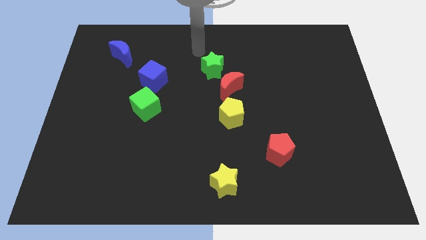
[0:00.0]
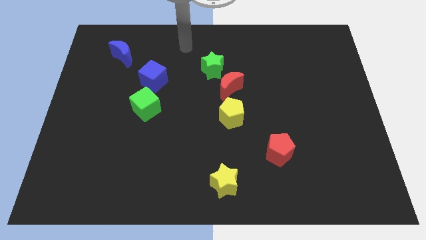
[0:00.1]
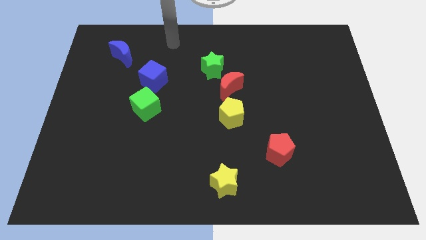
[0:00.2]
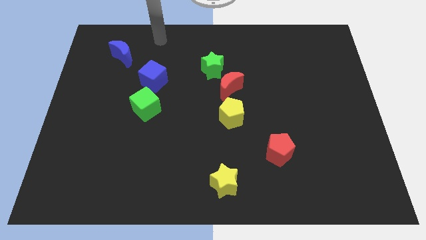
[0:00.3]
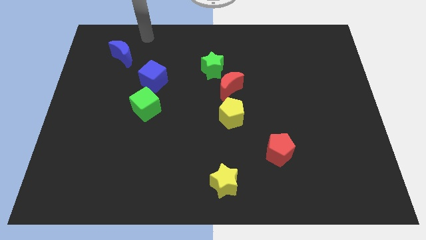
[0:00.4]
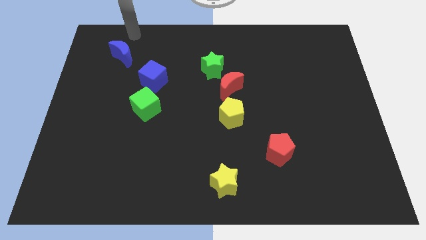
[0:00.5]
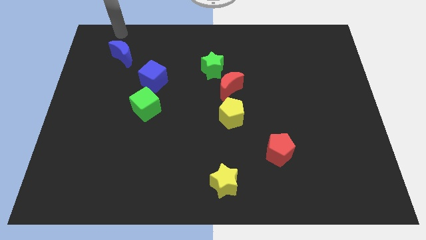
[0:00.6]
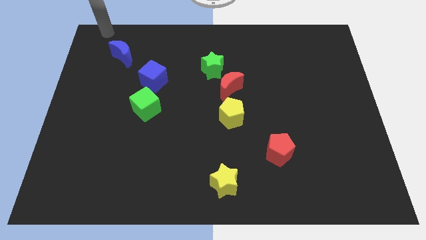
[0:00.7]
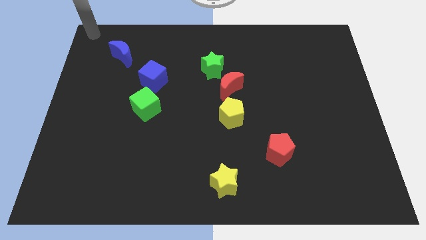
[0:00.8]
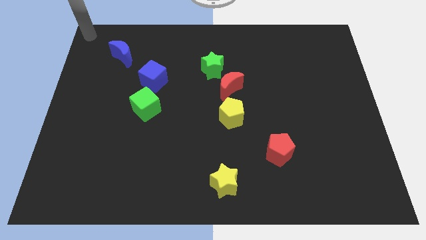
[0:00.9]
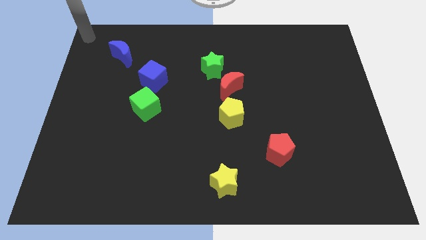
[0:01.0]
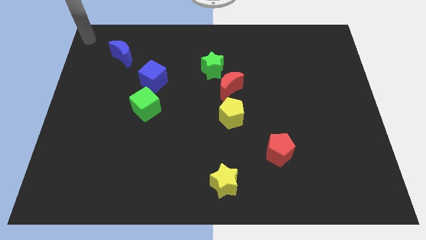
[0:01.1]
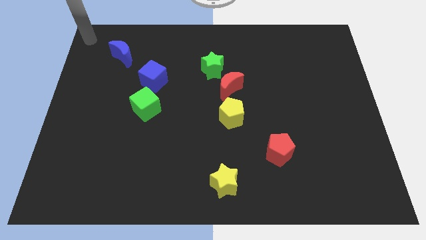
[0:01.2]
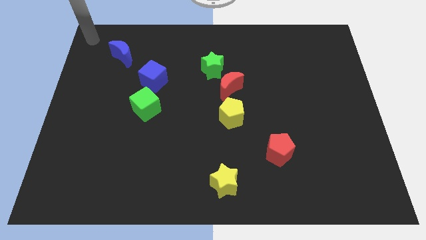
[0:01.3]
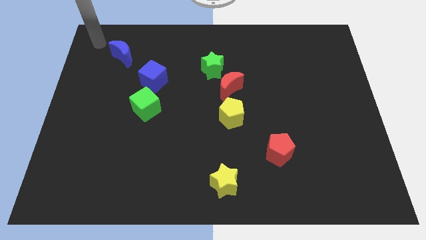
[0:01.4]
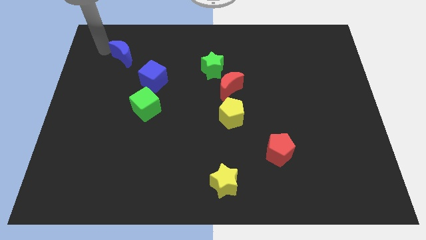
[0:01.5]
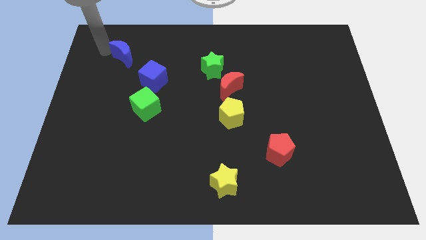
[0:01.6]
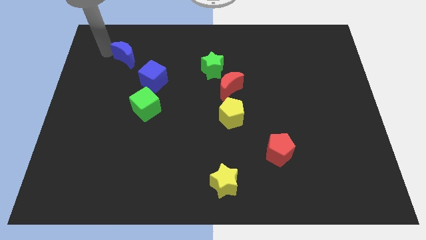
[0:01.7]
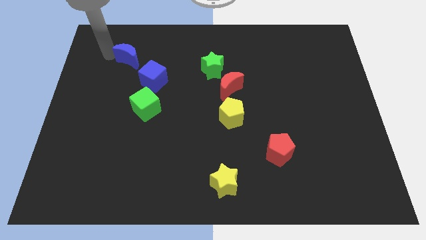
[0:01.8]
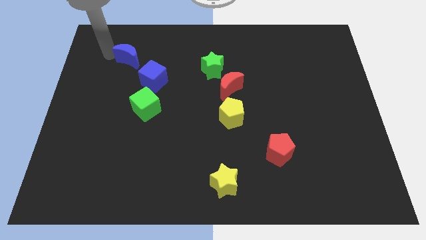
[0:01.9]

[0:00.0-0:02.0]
move the blue crescent slightly to the right

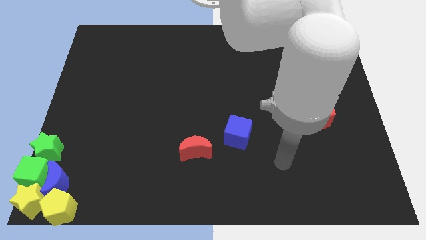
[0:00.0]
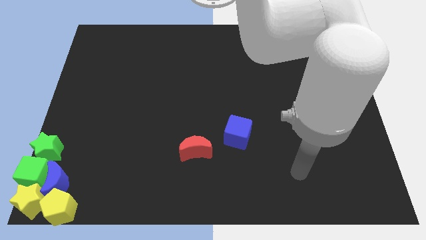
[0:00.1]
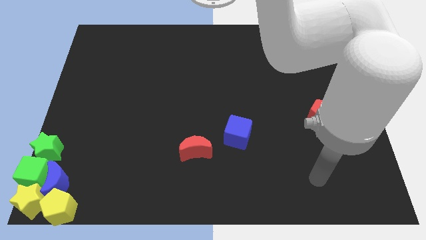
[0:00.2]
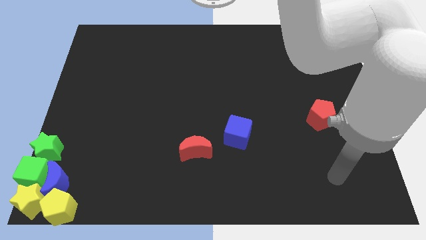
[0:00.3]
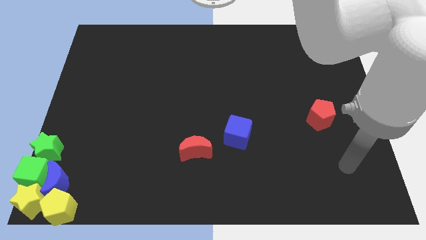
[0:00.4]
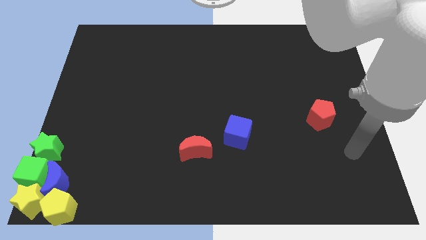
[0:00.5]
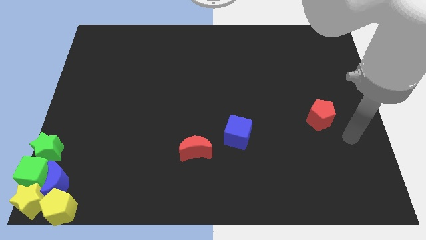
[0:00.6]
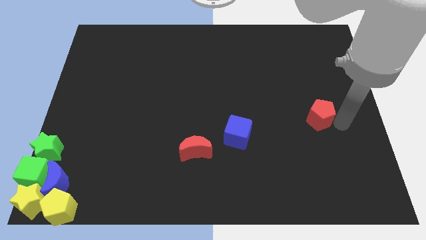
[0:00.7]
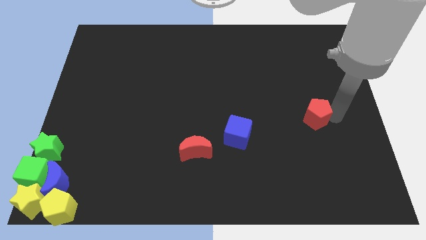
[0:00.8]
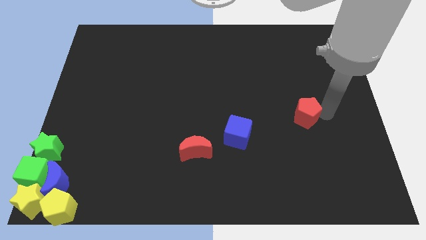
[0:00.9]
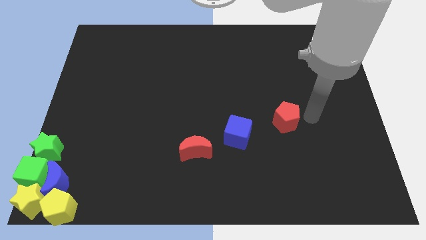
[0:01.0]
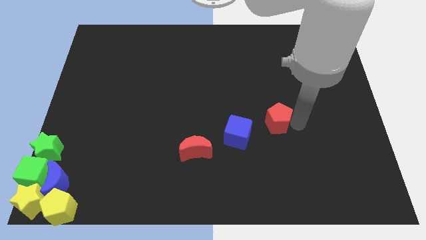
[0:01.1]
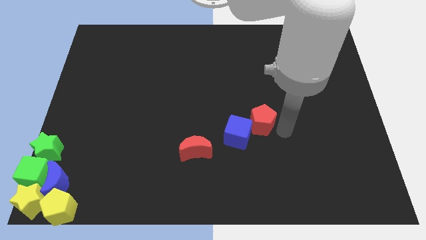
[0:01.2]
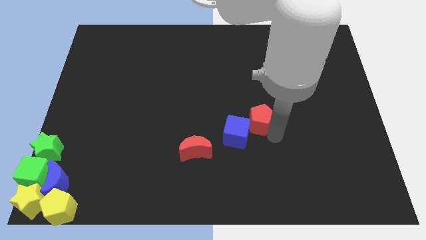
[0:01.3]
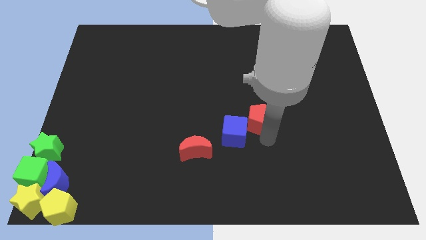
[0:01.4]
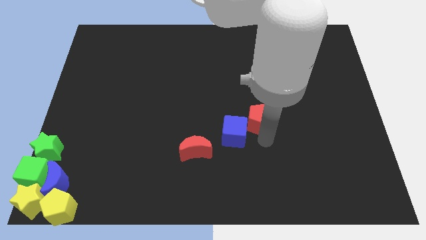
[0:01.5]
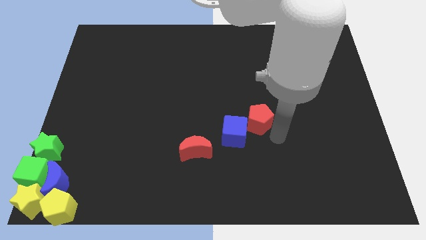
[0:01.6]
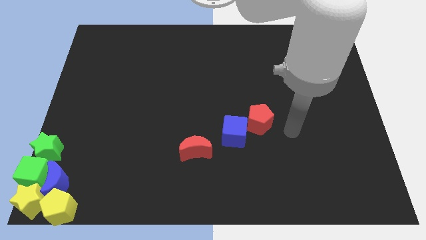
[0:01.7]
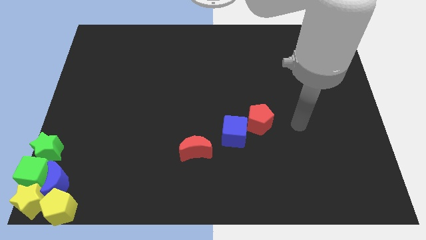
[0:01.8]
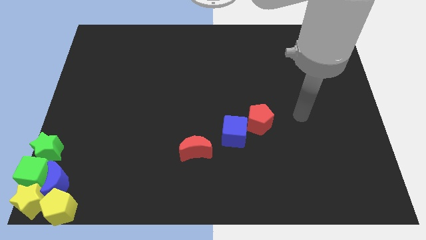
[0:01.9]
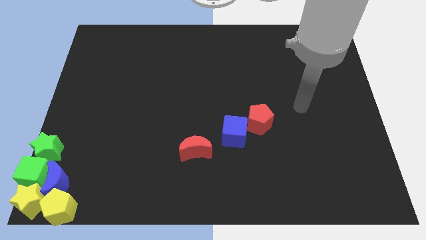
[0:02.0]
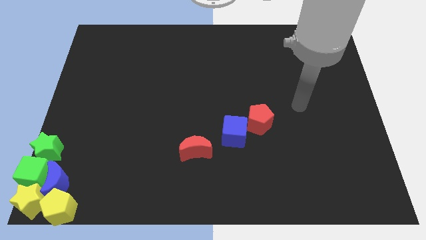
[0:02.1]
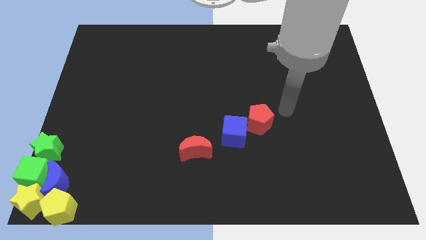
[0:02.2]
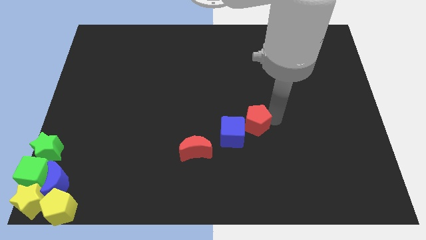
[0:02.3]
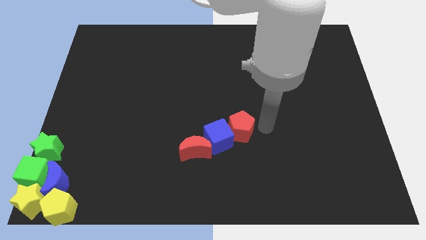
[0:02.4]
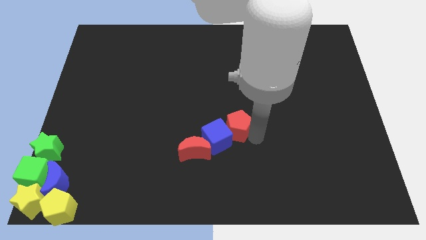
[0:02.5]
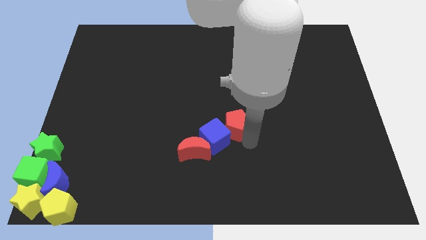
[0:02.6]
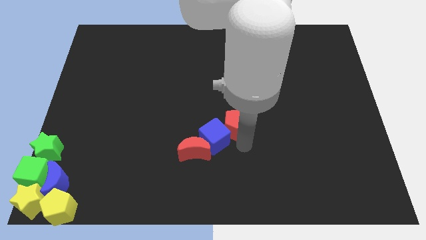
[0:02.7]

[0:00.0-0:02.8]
push the red pentagon into the blue cube

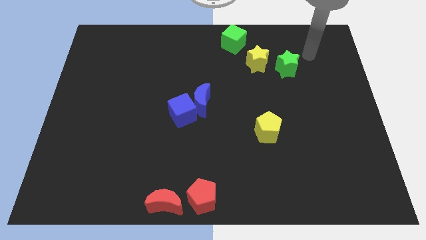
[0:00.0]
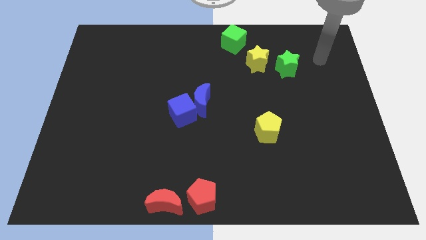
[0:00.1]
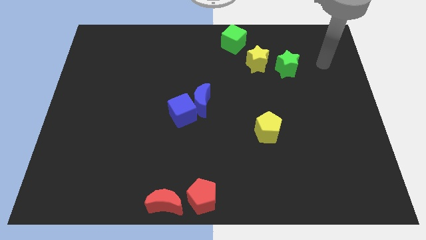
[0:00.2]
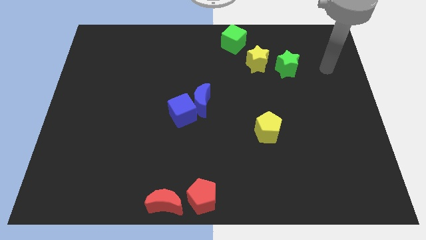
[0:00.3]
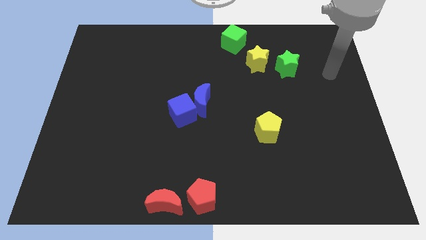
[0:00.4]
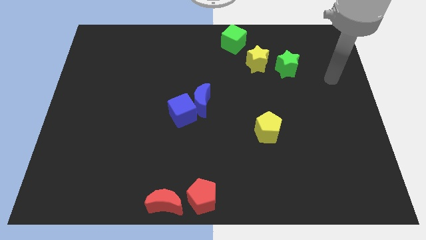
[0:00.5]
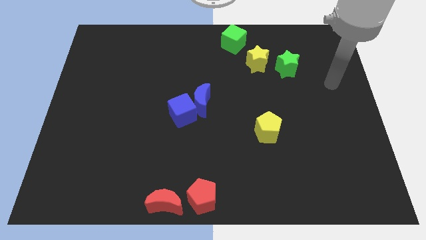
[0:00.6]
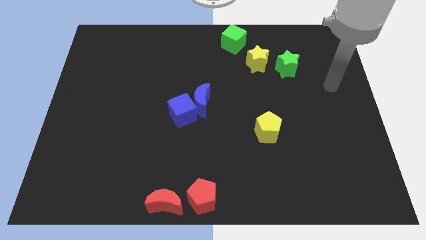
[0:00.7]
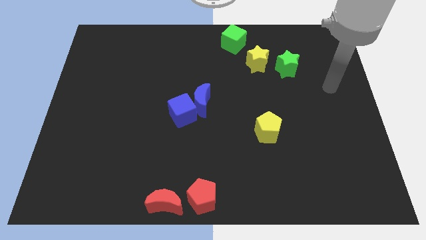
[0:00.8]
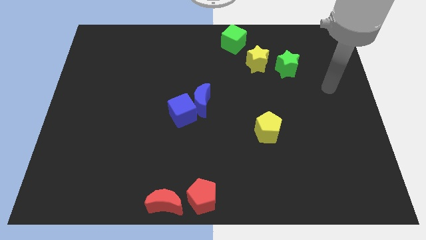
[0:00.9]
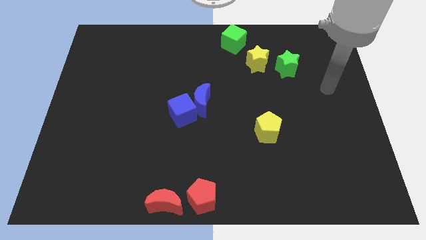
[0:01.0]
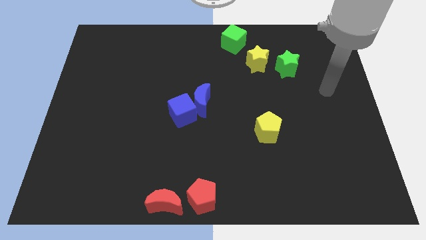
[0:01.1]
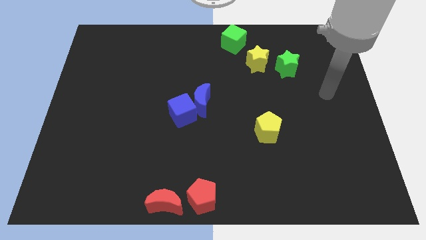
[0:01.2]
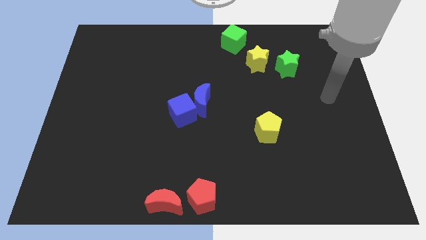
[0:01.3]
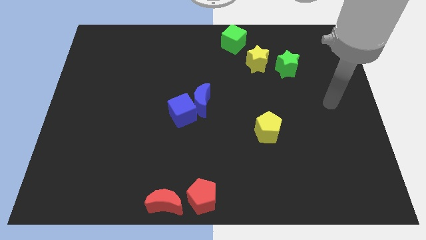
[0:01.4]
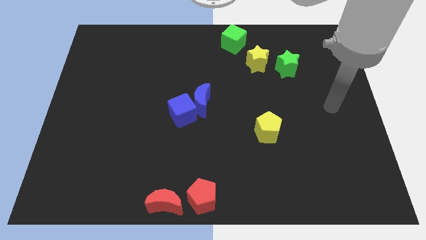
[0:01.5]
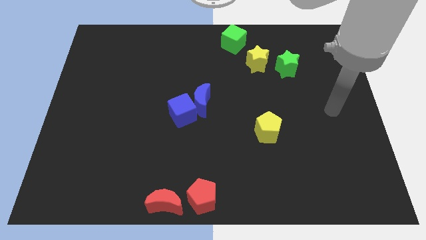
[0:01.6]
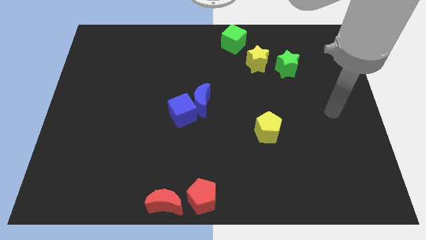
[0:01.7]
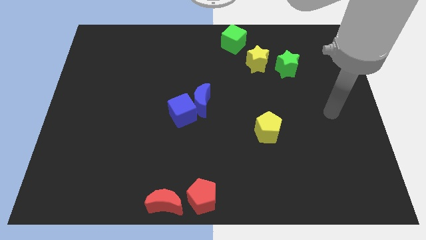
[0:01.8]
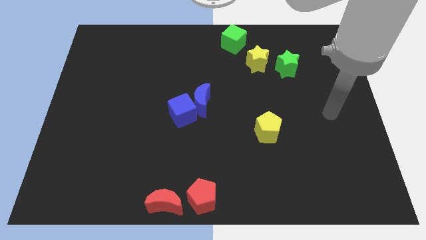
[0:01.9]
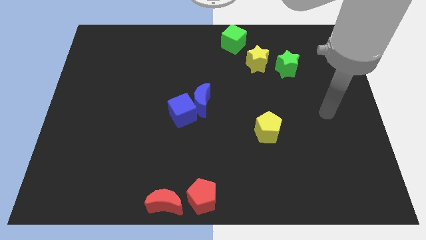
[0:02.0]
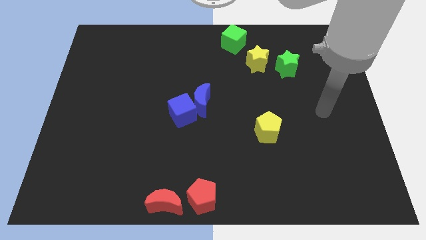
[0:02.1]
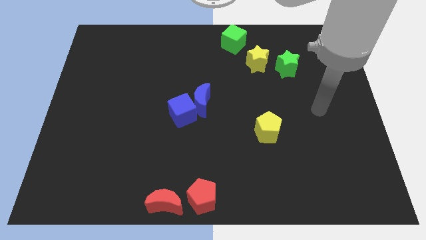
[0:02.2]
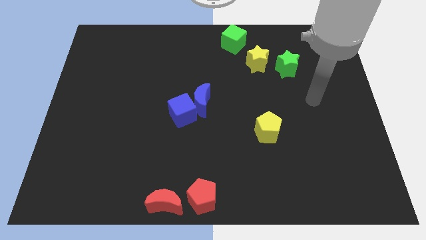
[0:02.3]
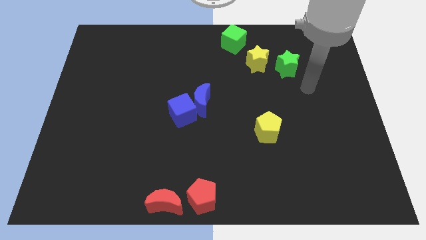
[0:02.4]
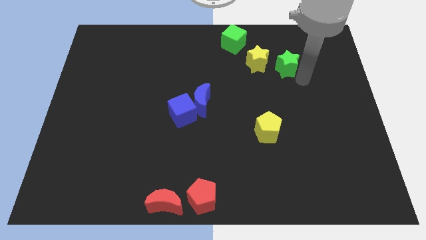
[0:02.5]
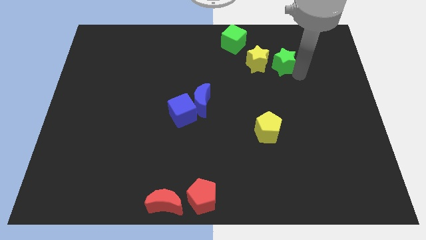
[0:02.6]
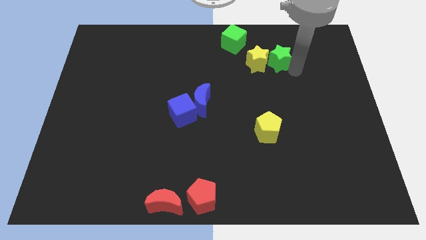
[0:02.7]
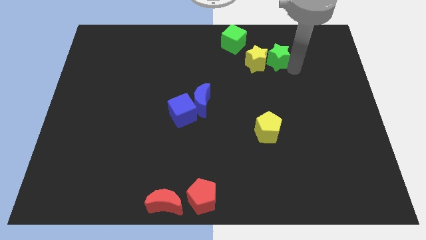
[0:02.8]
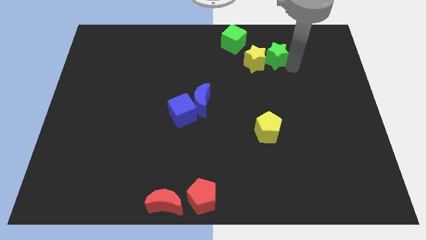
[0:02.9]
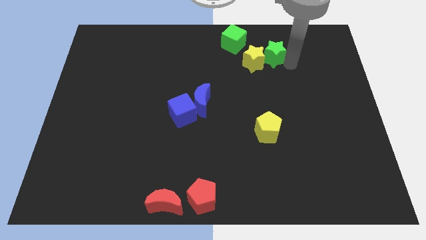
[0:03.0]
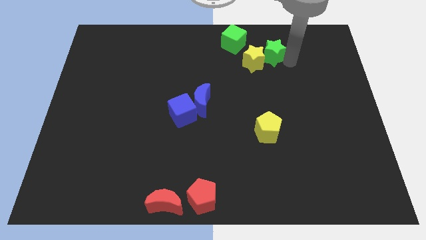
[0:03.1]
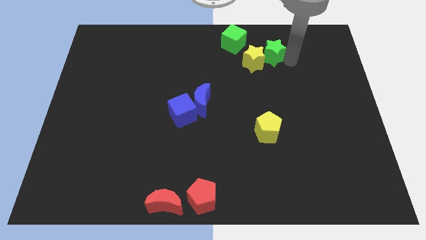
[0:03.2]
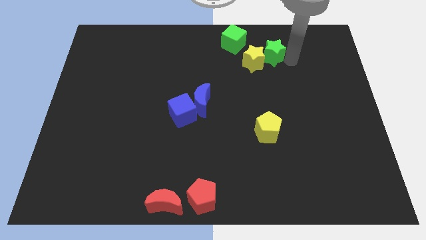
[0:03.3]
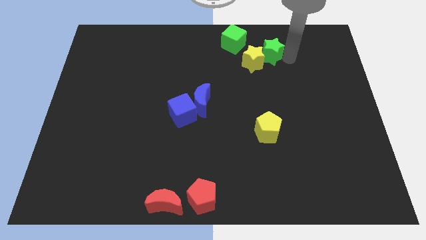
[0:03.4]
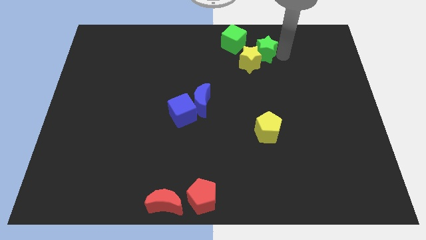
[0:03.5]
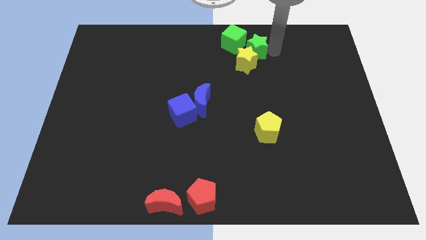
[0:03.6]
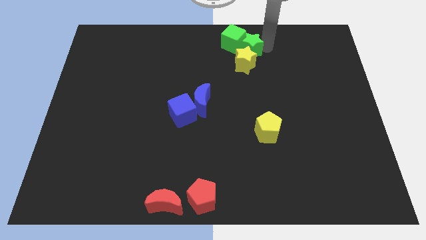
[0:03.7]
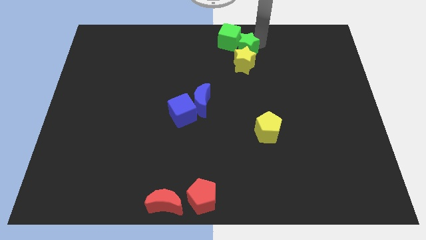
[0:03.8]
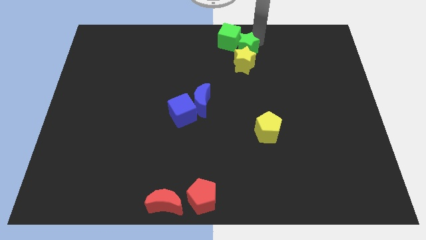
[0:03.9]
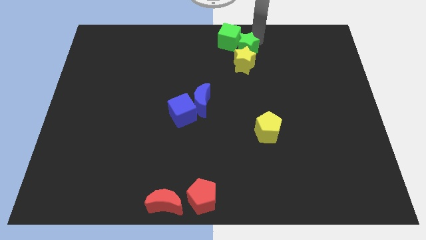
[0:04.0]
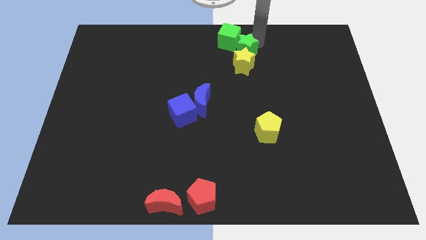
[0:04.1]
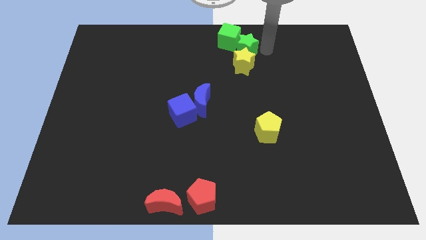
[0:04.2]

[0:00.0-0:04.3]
push the green star into the bottom of green cube
